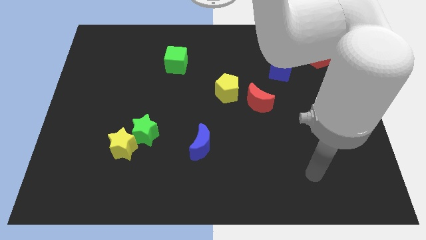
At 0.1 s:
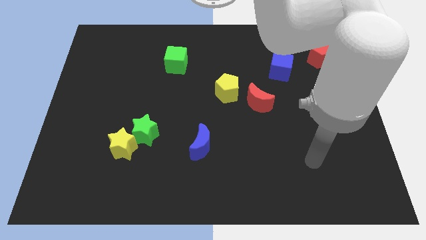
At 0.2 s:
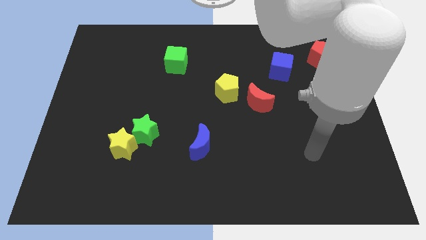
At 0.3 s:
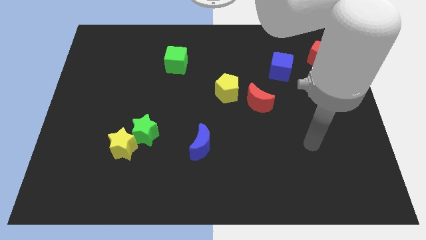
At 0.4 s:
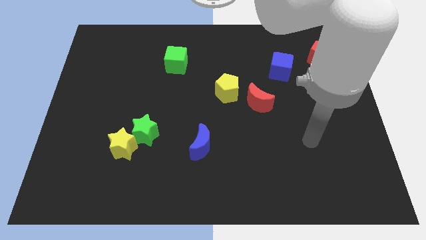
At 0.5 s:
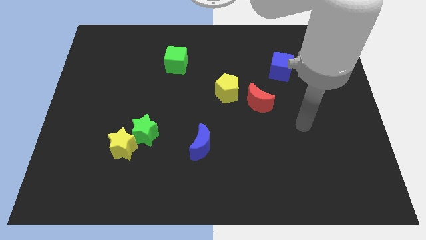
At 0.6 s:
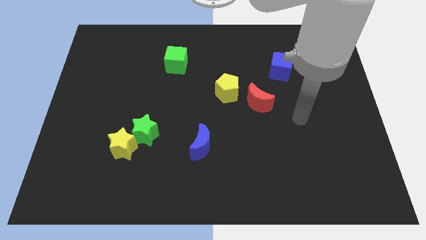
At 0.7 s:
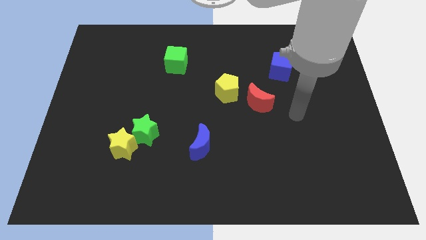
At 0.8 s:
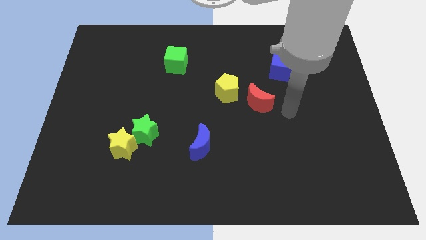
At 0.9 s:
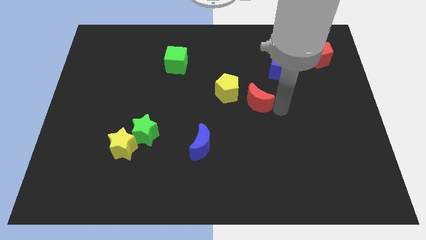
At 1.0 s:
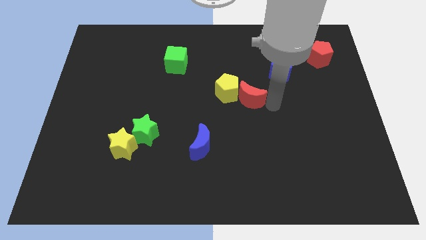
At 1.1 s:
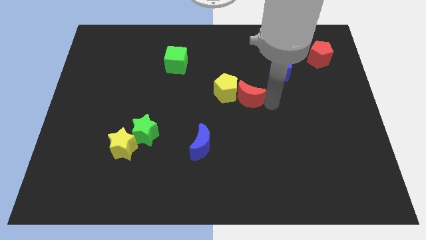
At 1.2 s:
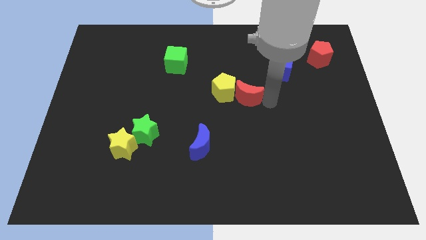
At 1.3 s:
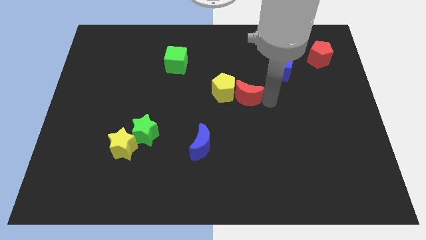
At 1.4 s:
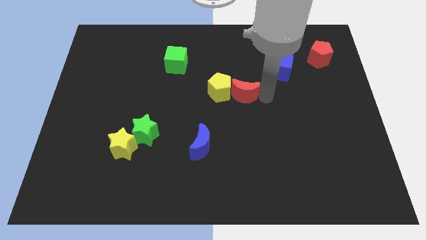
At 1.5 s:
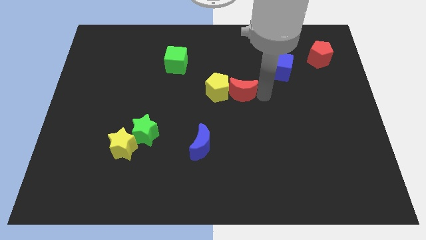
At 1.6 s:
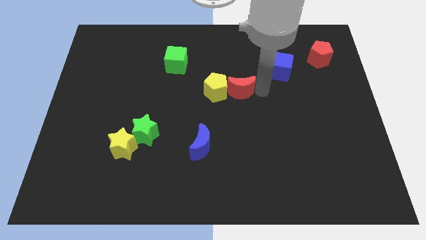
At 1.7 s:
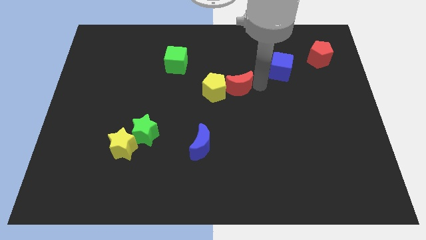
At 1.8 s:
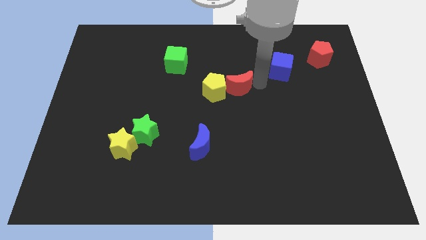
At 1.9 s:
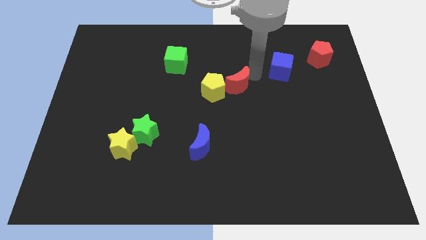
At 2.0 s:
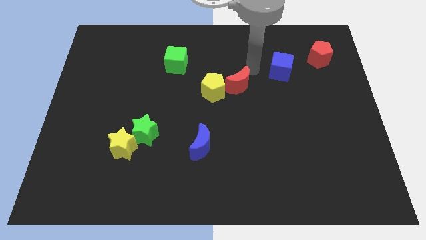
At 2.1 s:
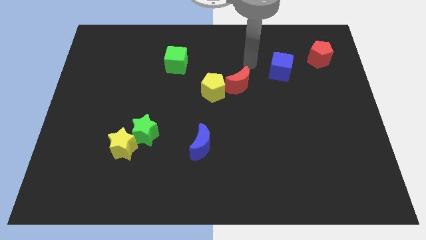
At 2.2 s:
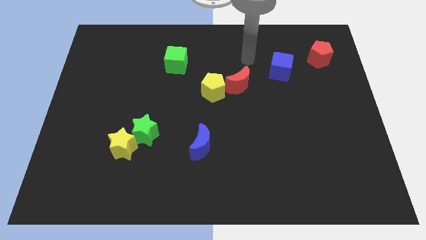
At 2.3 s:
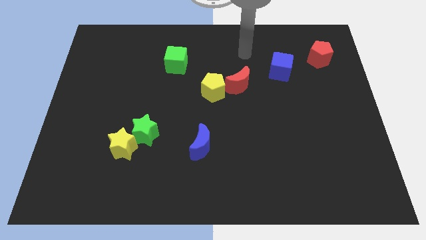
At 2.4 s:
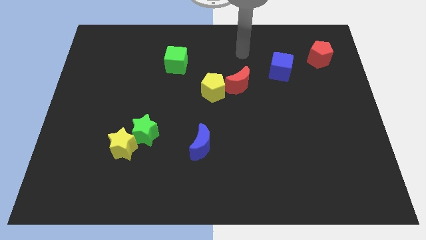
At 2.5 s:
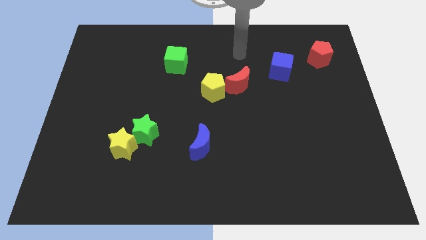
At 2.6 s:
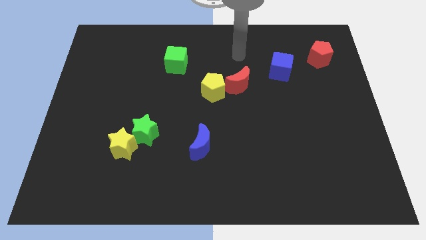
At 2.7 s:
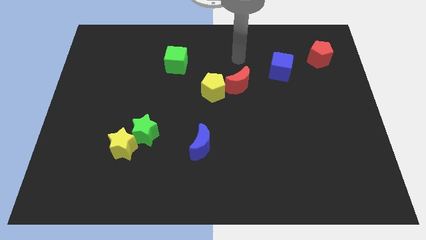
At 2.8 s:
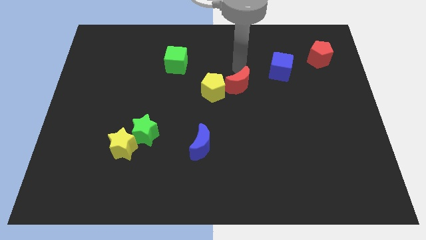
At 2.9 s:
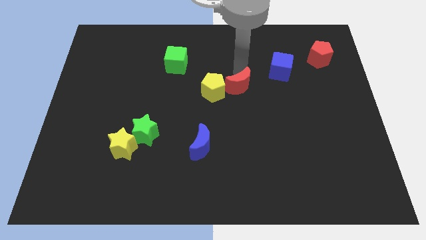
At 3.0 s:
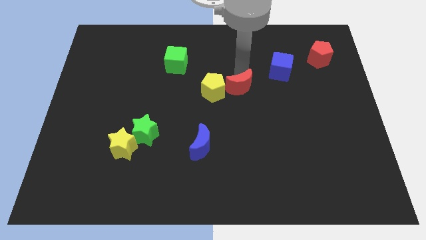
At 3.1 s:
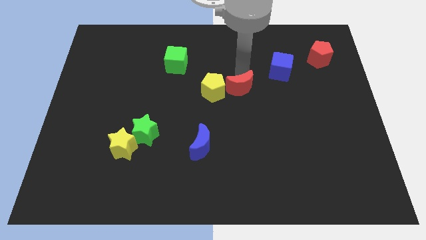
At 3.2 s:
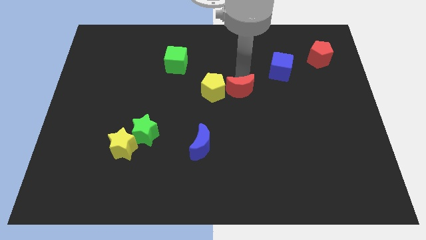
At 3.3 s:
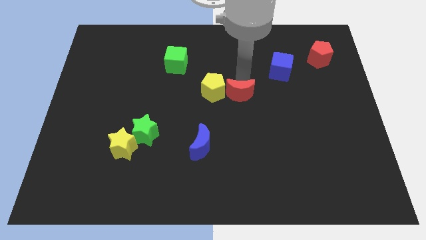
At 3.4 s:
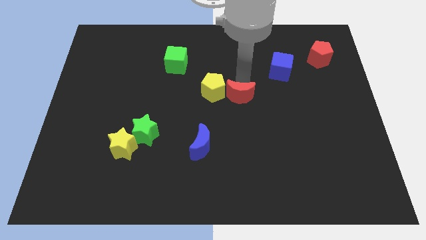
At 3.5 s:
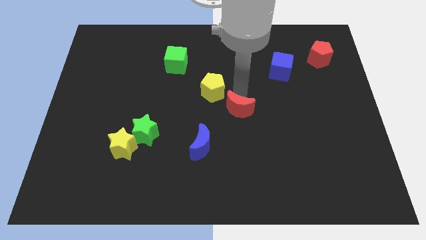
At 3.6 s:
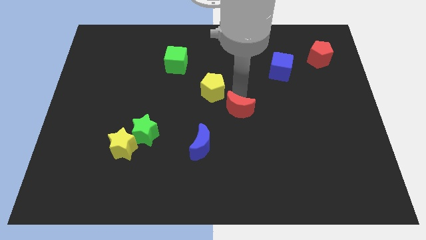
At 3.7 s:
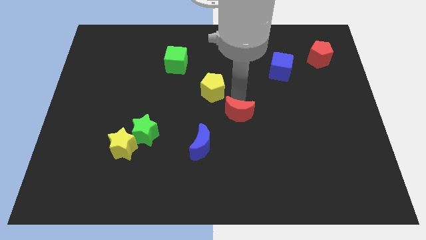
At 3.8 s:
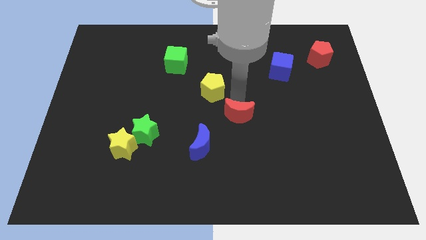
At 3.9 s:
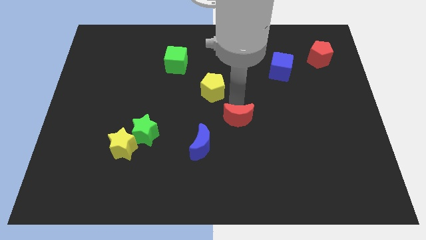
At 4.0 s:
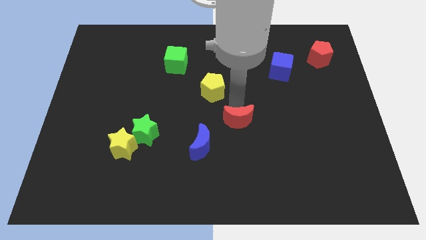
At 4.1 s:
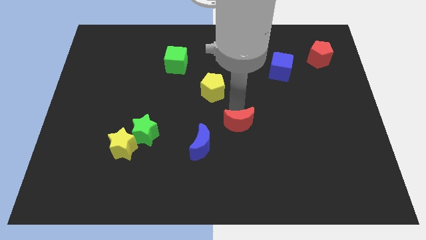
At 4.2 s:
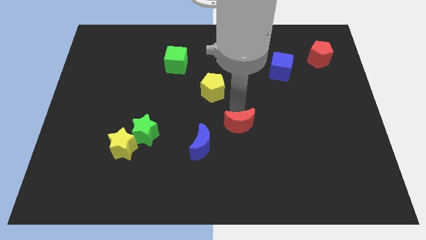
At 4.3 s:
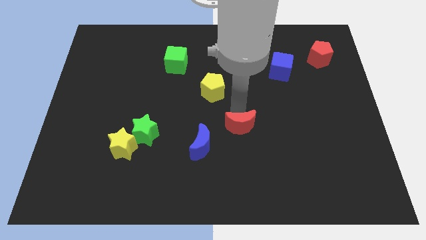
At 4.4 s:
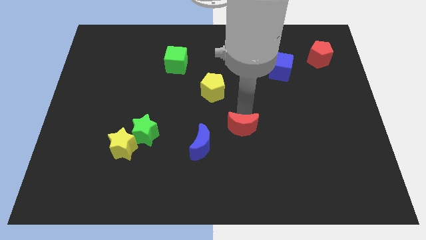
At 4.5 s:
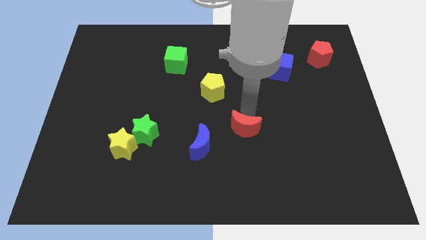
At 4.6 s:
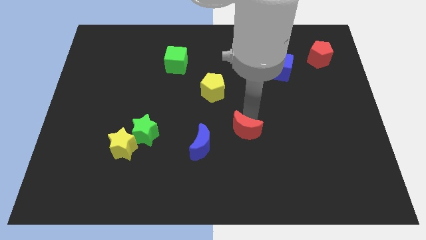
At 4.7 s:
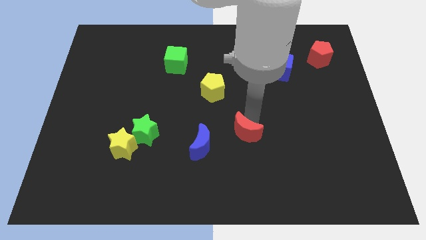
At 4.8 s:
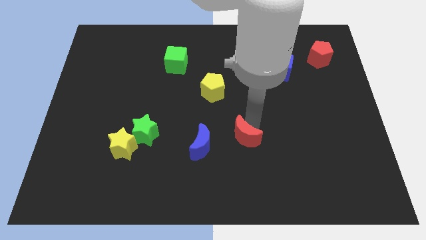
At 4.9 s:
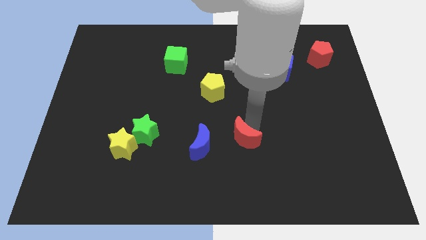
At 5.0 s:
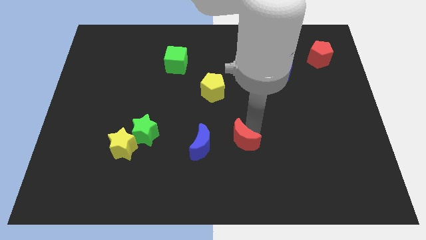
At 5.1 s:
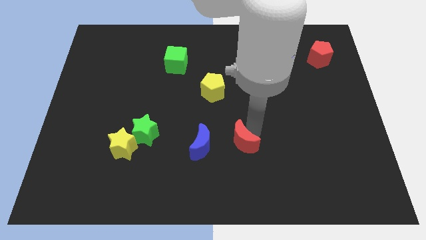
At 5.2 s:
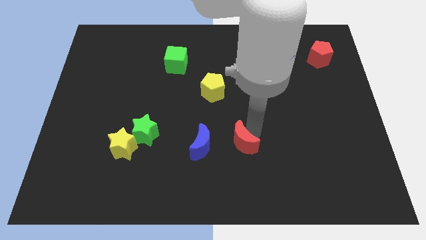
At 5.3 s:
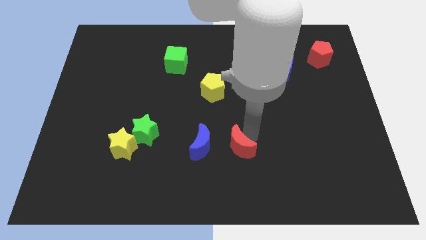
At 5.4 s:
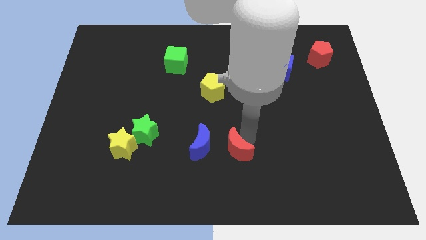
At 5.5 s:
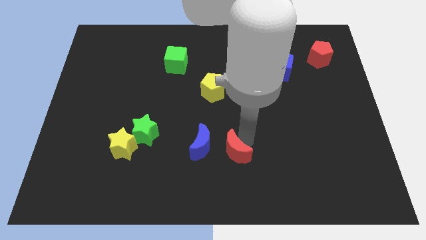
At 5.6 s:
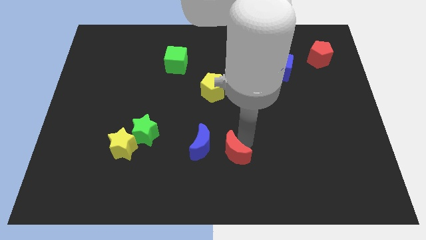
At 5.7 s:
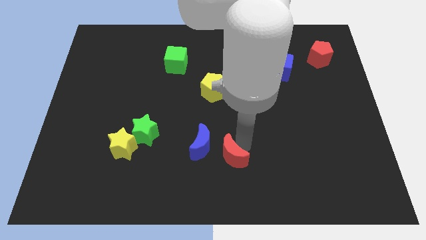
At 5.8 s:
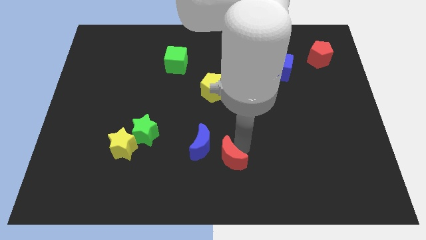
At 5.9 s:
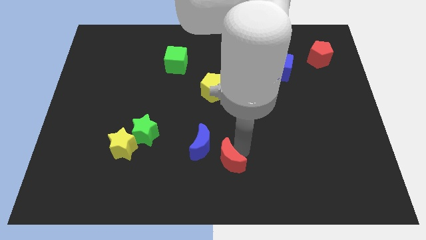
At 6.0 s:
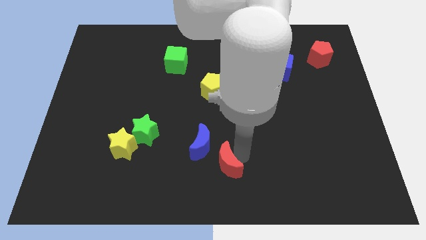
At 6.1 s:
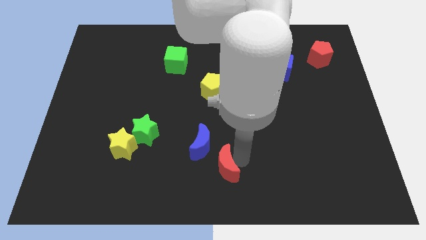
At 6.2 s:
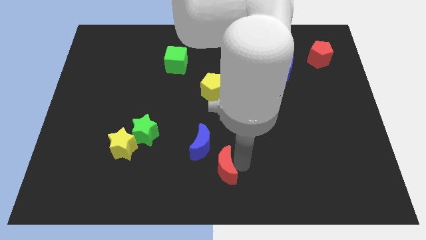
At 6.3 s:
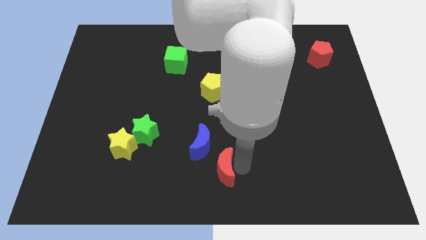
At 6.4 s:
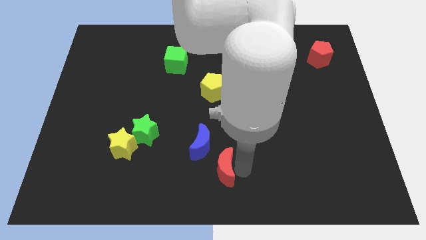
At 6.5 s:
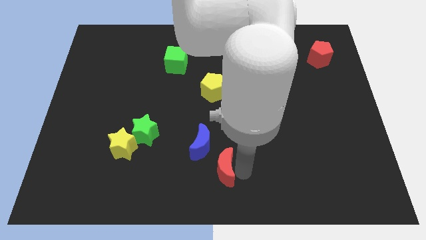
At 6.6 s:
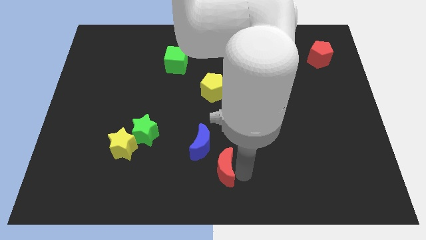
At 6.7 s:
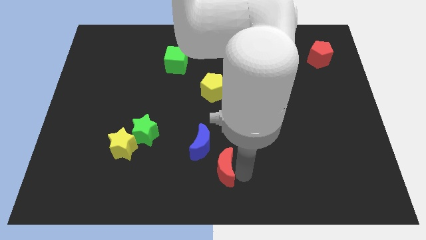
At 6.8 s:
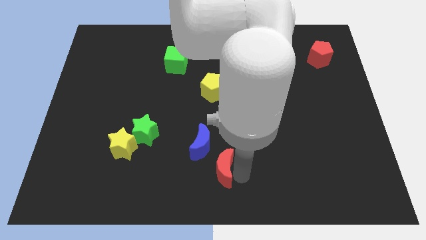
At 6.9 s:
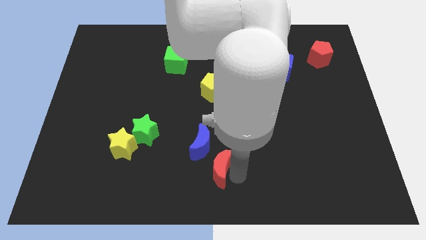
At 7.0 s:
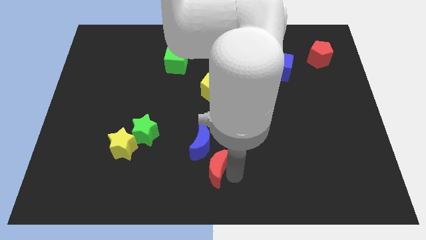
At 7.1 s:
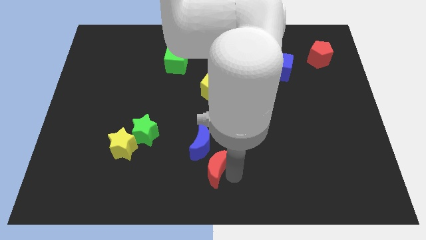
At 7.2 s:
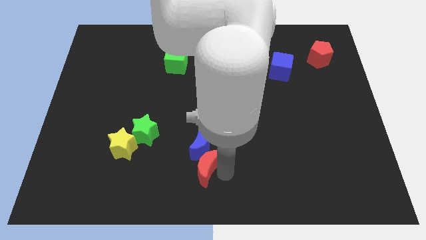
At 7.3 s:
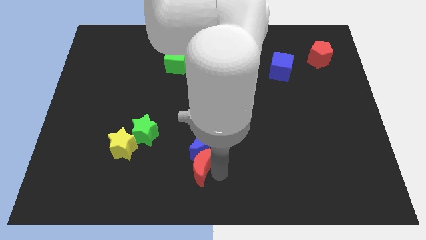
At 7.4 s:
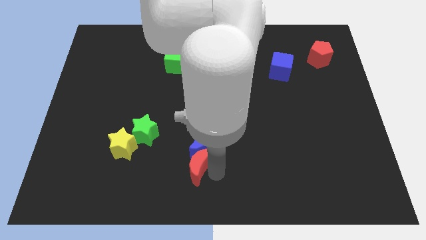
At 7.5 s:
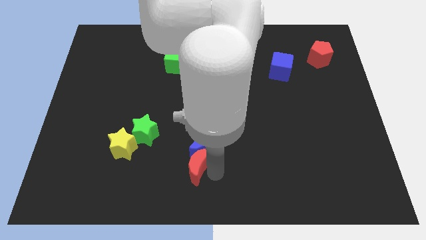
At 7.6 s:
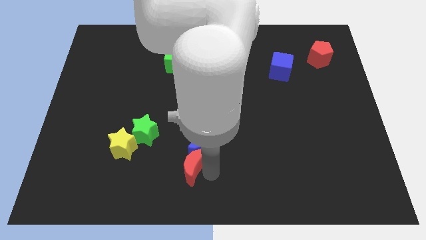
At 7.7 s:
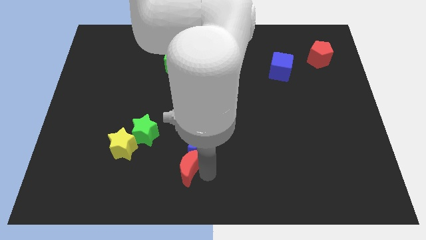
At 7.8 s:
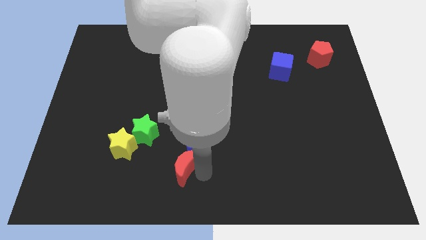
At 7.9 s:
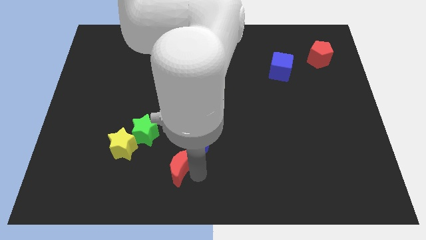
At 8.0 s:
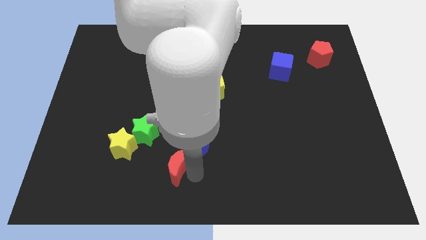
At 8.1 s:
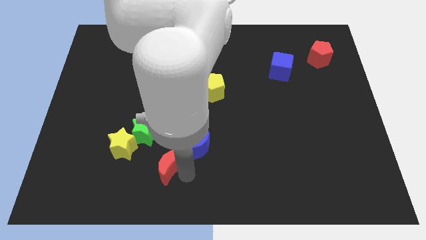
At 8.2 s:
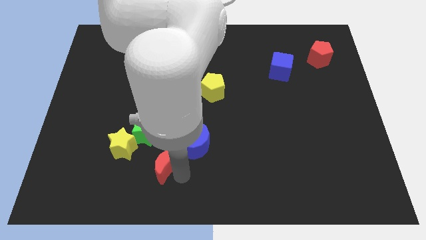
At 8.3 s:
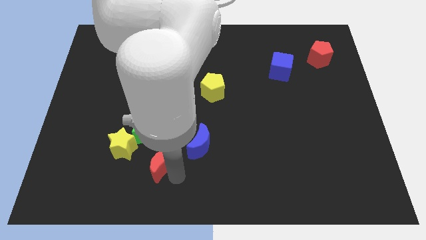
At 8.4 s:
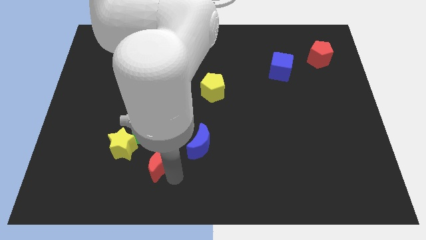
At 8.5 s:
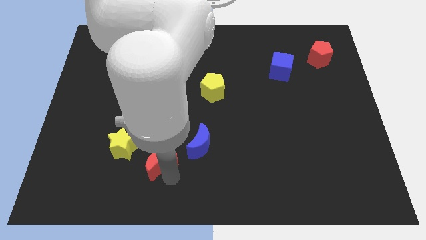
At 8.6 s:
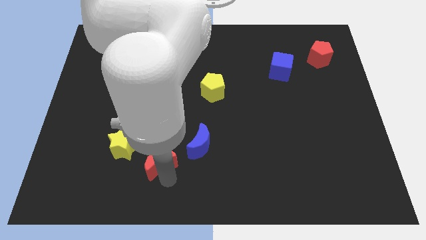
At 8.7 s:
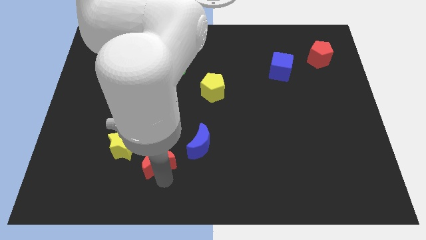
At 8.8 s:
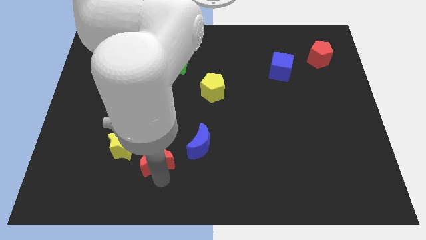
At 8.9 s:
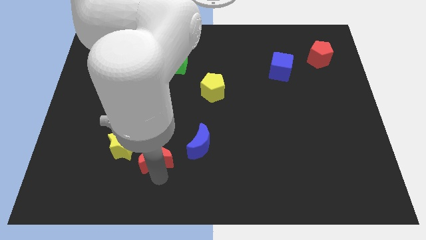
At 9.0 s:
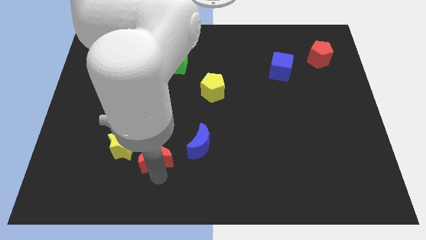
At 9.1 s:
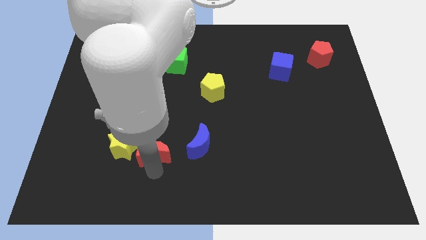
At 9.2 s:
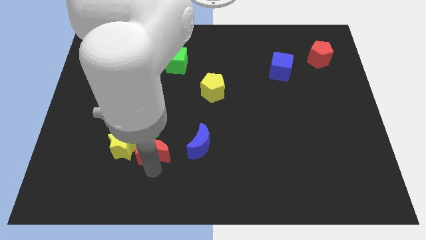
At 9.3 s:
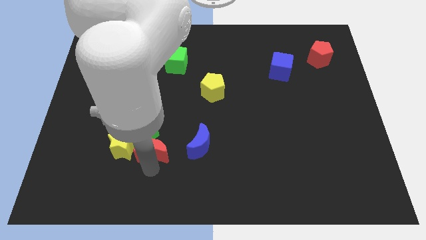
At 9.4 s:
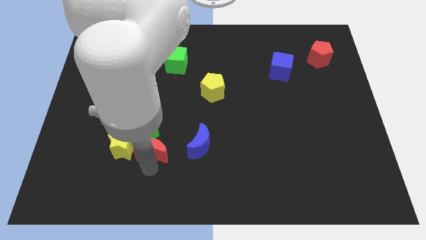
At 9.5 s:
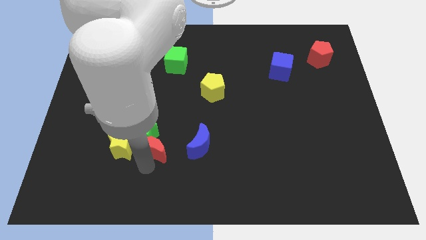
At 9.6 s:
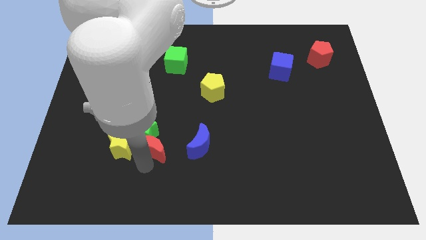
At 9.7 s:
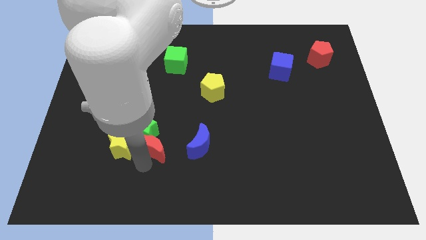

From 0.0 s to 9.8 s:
slide the red moon to the yellow star
